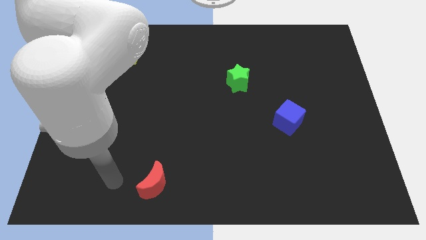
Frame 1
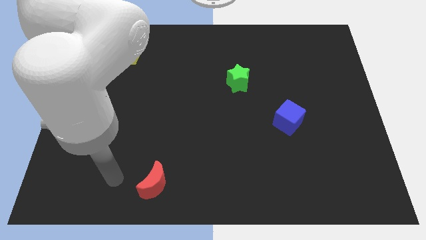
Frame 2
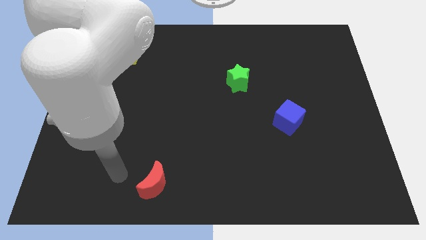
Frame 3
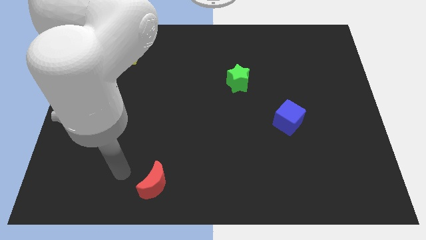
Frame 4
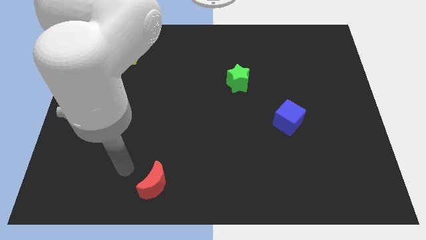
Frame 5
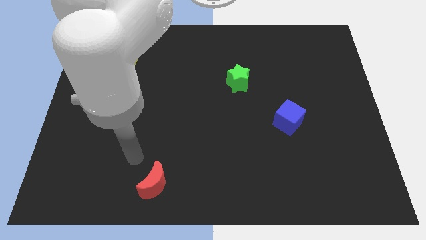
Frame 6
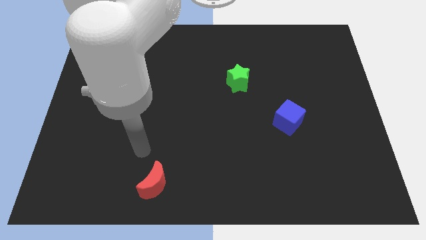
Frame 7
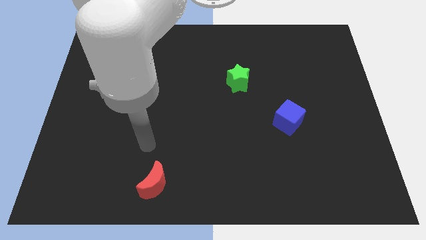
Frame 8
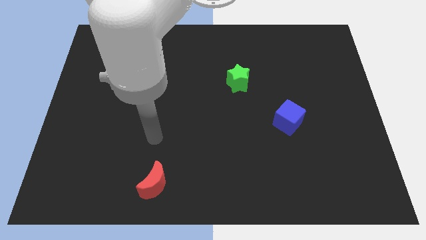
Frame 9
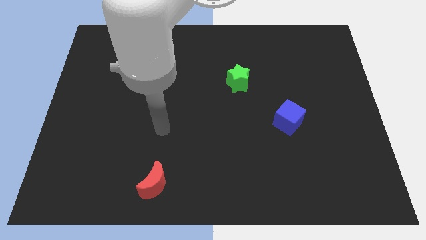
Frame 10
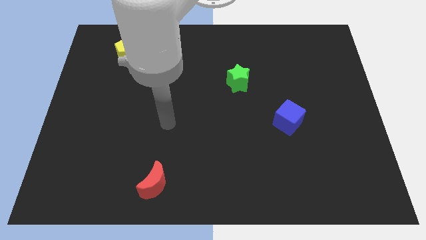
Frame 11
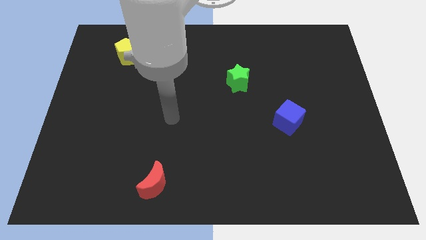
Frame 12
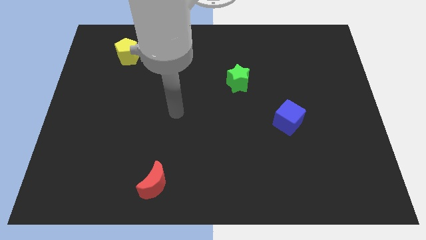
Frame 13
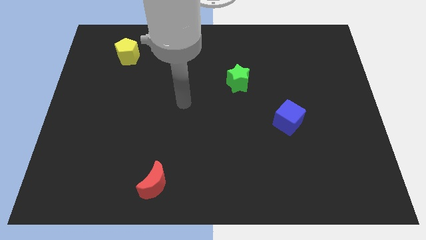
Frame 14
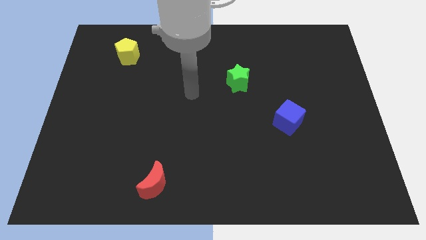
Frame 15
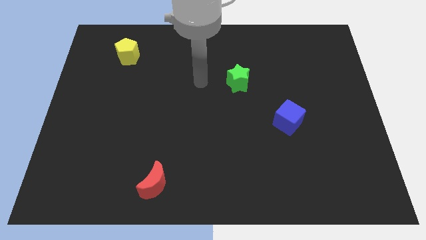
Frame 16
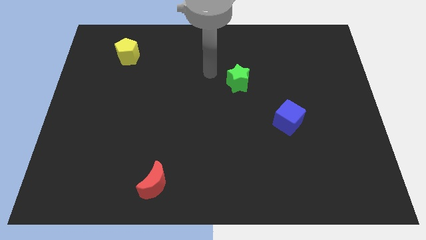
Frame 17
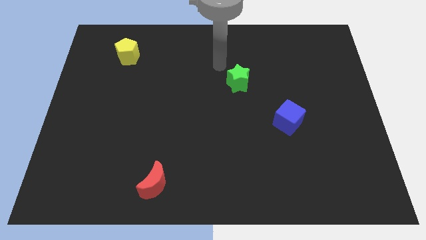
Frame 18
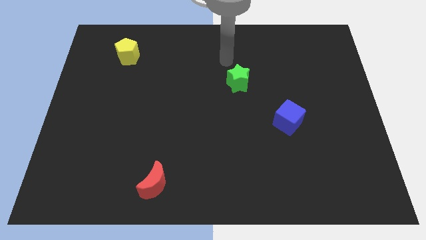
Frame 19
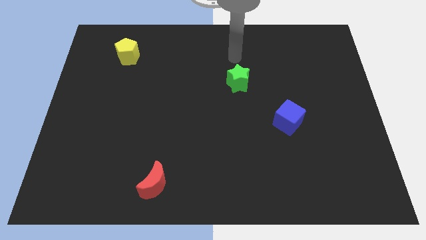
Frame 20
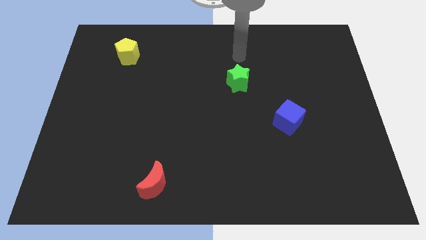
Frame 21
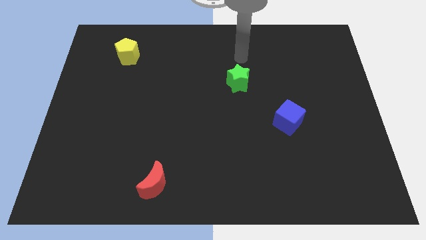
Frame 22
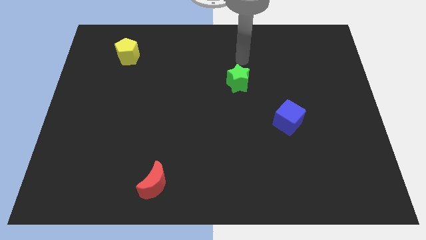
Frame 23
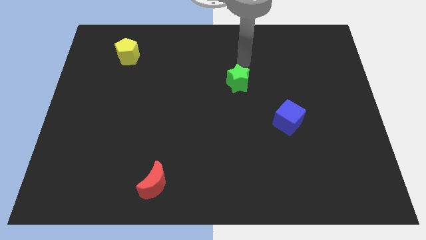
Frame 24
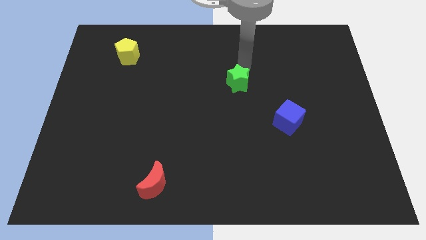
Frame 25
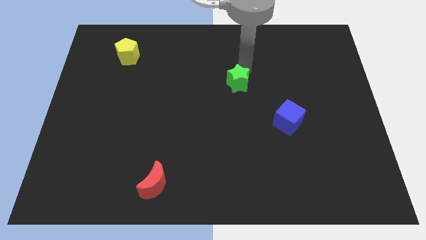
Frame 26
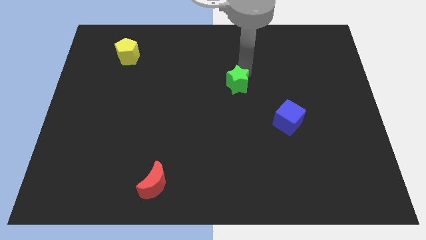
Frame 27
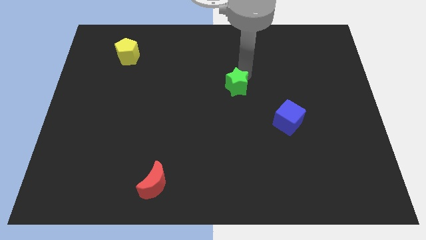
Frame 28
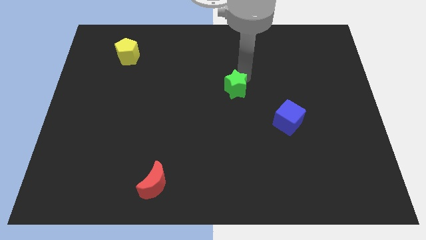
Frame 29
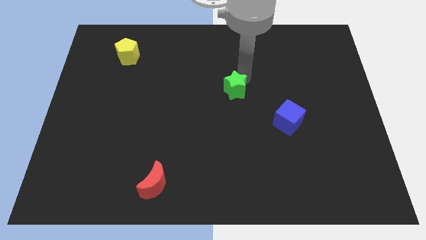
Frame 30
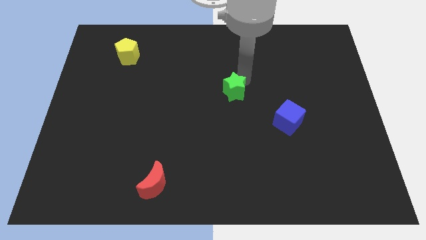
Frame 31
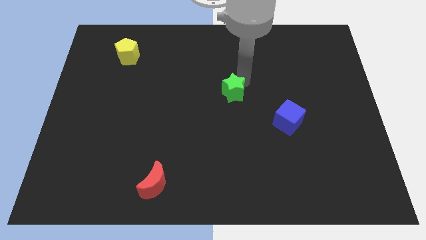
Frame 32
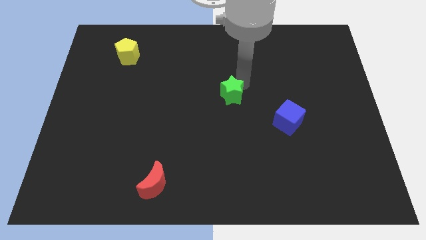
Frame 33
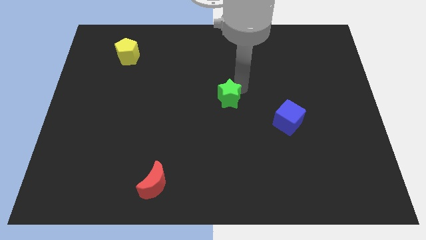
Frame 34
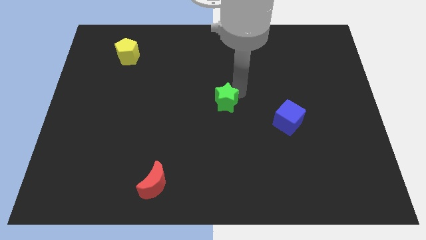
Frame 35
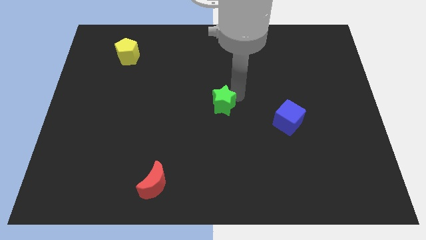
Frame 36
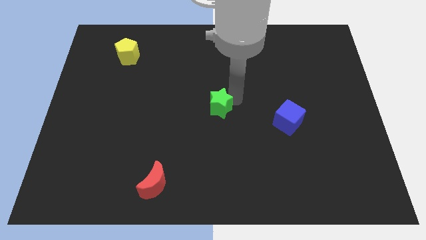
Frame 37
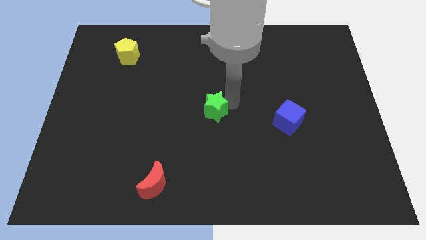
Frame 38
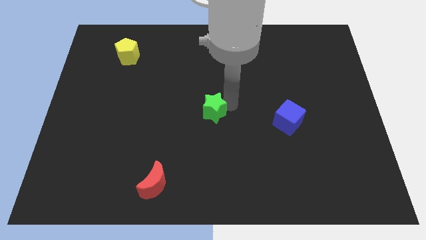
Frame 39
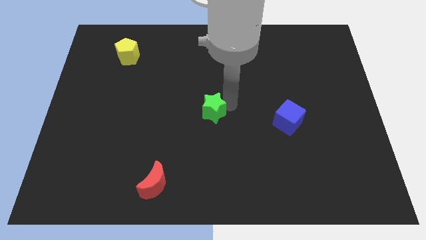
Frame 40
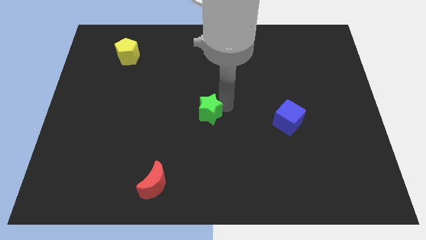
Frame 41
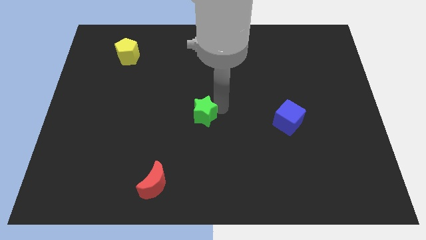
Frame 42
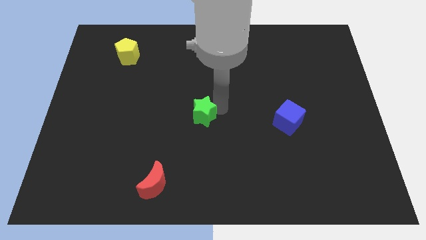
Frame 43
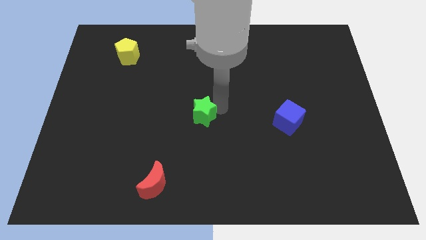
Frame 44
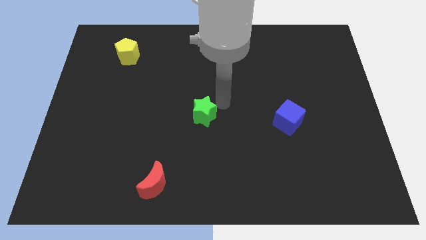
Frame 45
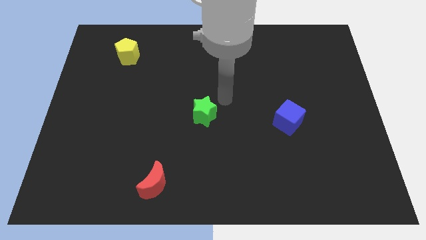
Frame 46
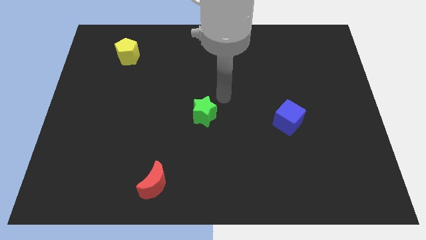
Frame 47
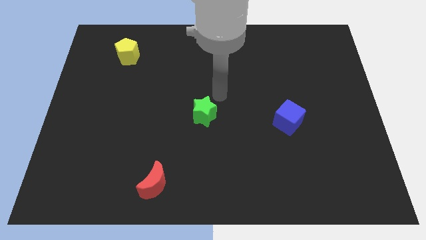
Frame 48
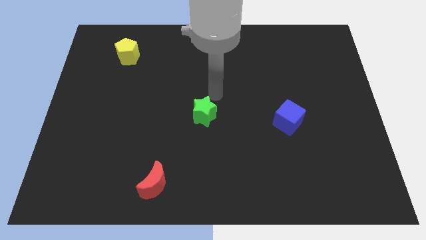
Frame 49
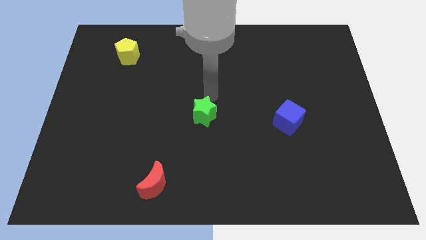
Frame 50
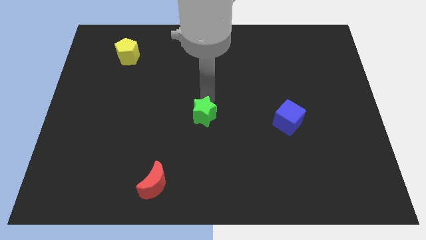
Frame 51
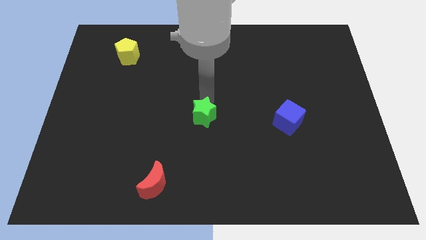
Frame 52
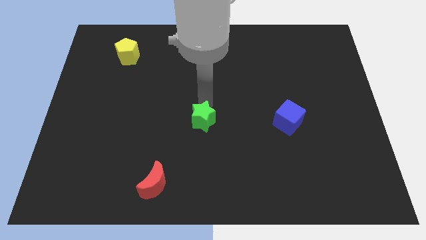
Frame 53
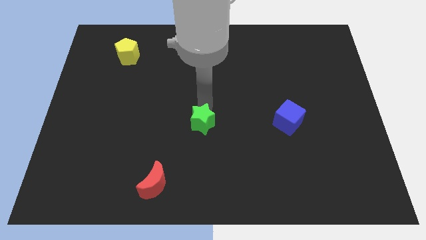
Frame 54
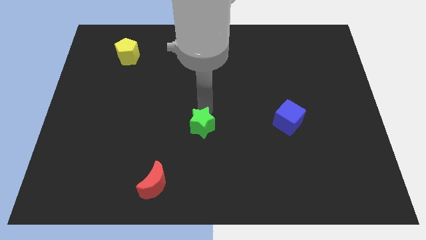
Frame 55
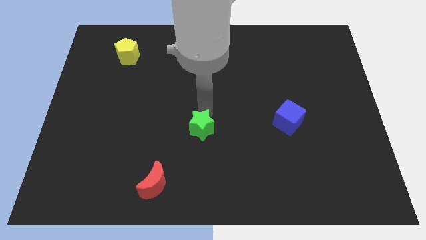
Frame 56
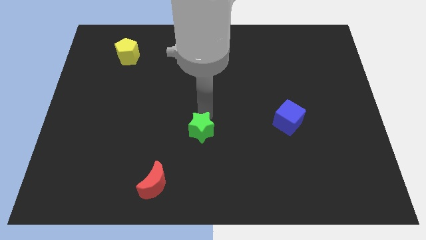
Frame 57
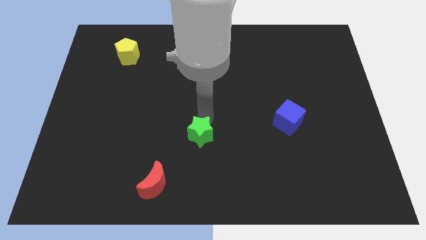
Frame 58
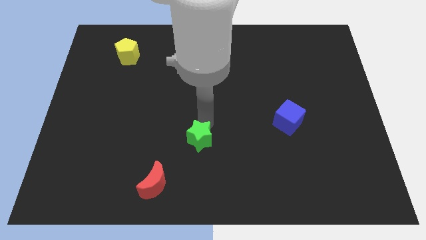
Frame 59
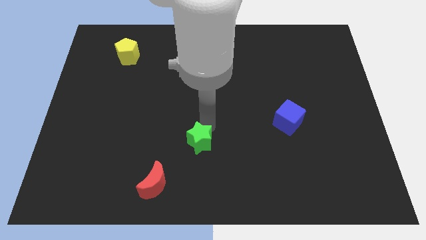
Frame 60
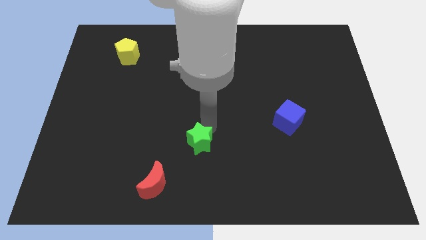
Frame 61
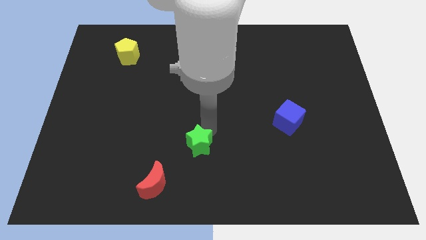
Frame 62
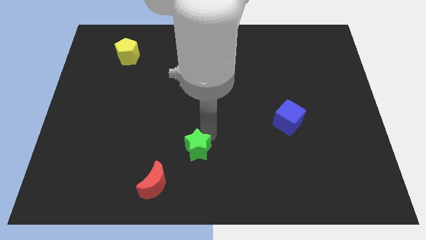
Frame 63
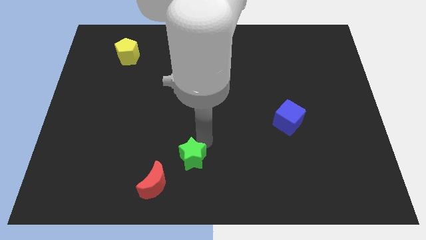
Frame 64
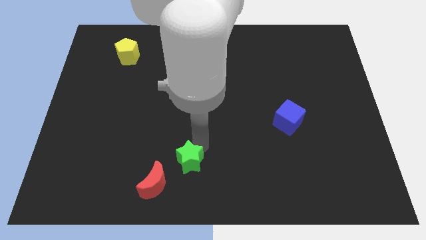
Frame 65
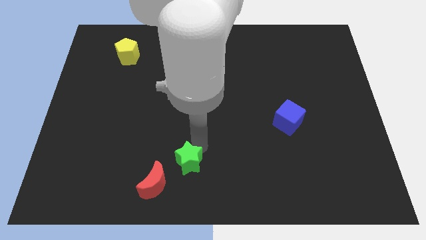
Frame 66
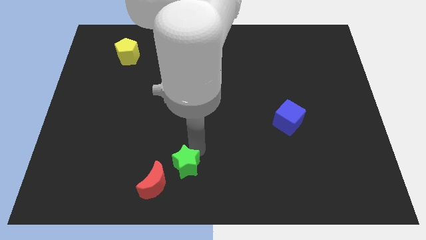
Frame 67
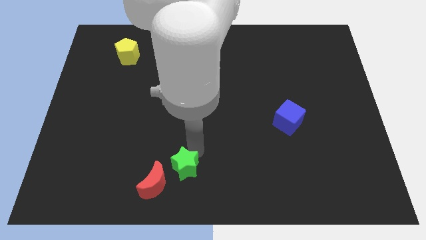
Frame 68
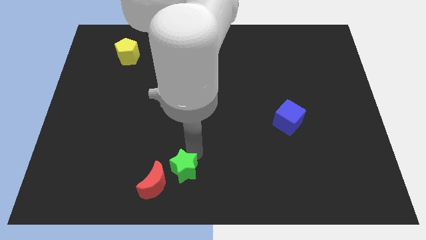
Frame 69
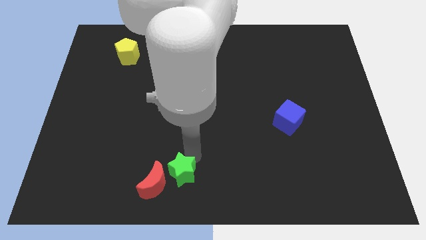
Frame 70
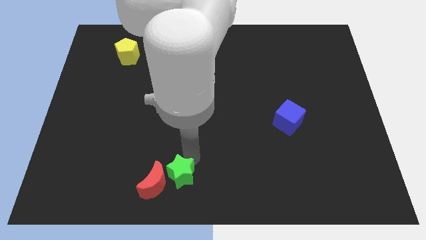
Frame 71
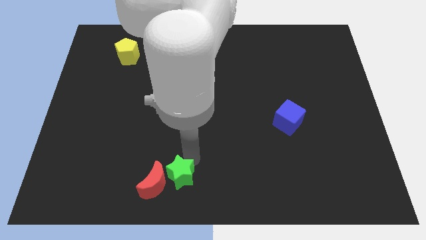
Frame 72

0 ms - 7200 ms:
push the green block close to the moon

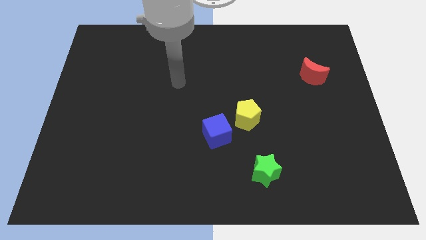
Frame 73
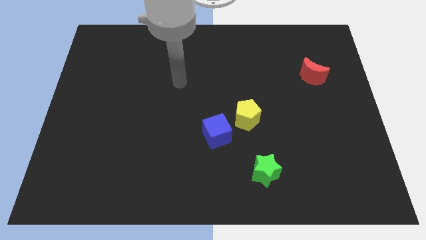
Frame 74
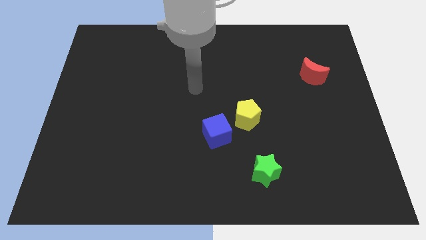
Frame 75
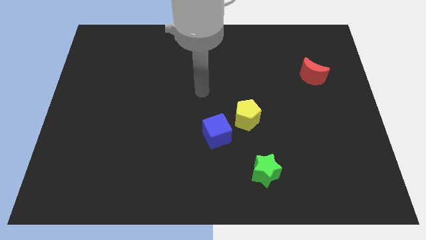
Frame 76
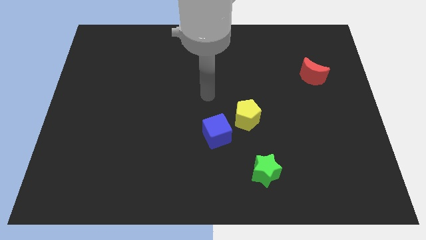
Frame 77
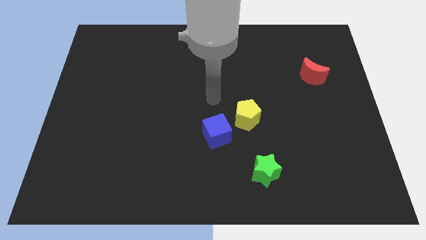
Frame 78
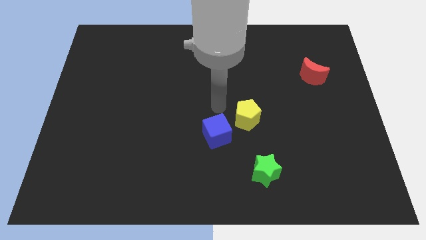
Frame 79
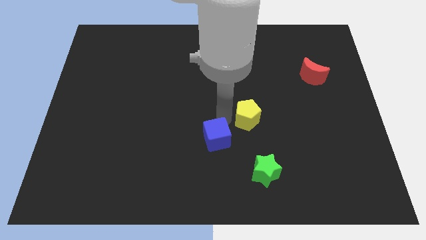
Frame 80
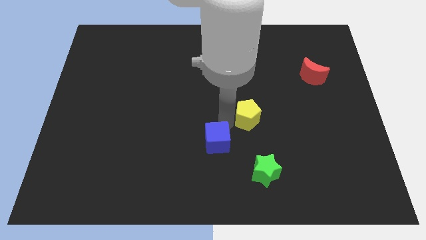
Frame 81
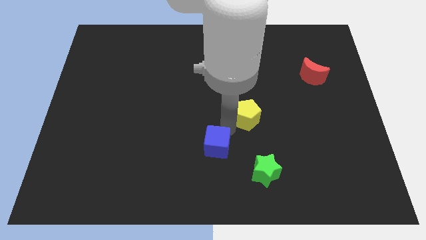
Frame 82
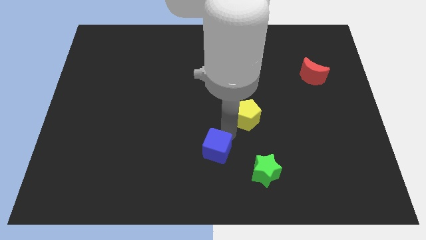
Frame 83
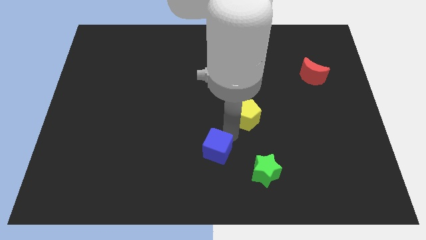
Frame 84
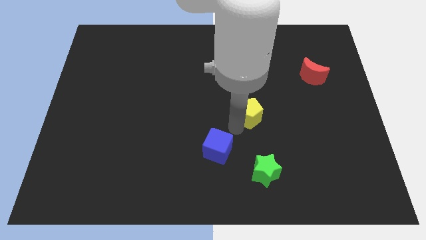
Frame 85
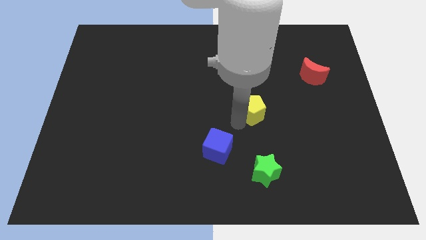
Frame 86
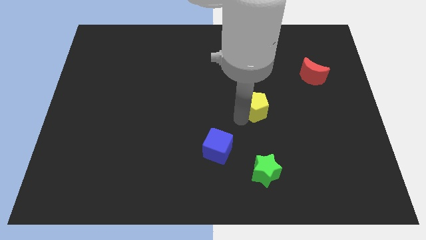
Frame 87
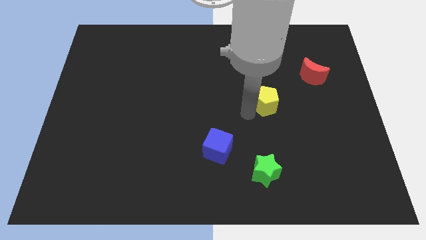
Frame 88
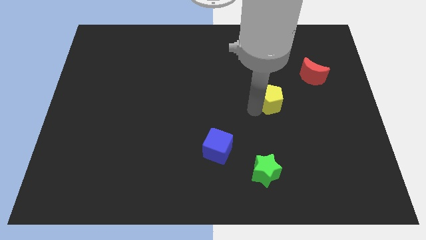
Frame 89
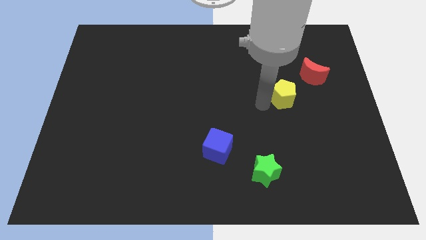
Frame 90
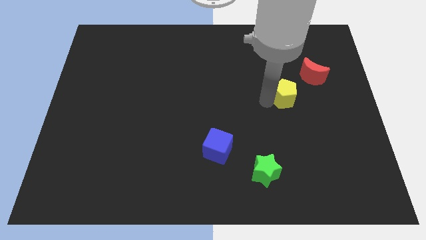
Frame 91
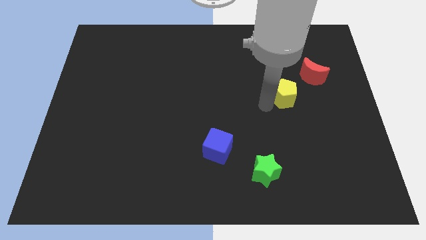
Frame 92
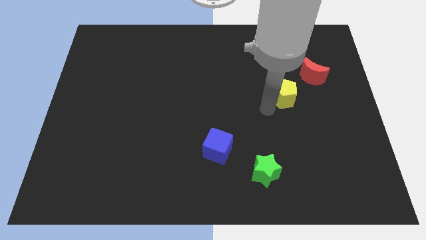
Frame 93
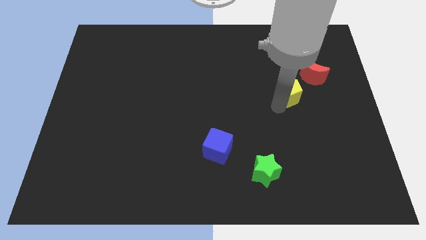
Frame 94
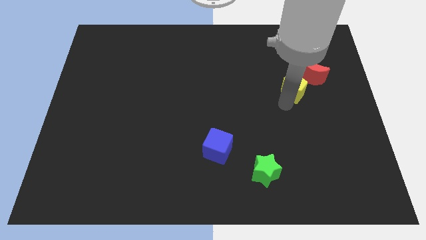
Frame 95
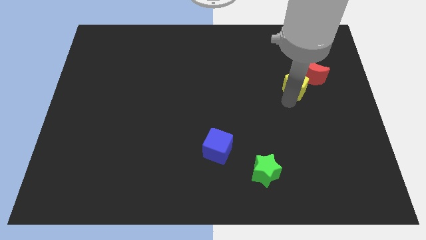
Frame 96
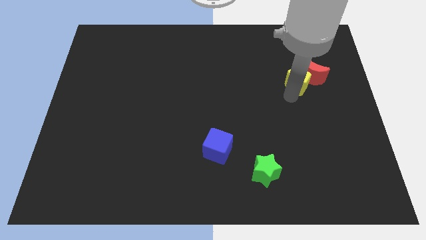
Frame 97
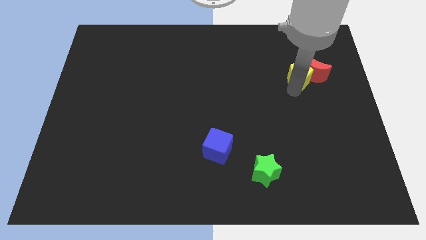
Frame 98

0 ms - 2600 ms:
move the yellow pentagon towards the moon
